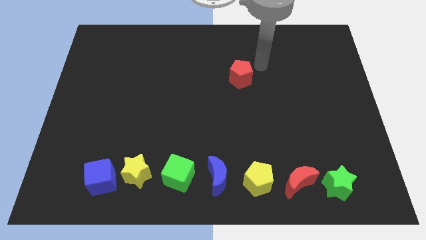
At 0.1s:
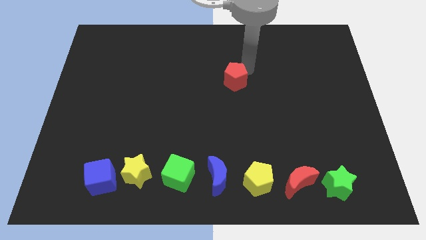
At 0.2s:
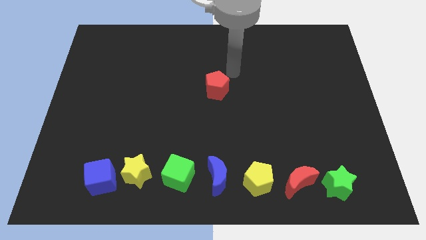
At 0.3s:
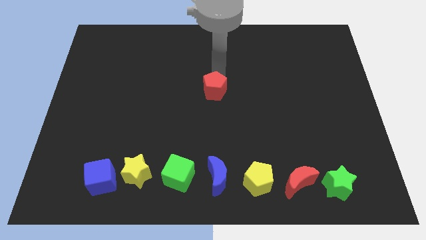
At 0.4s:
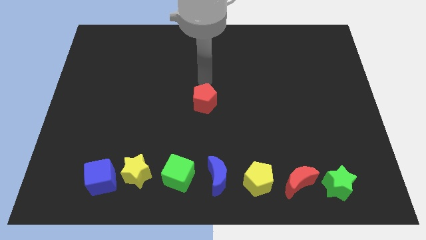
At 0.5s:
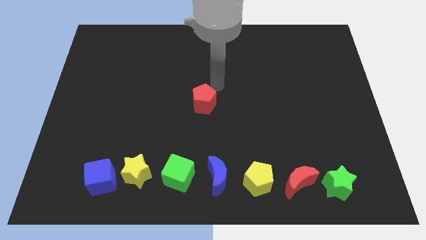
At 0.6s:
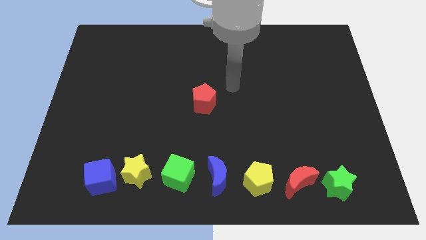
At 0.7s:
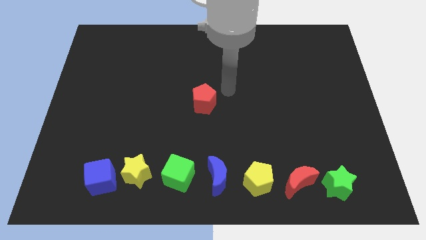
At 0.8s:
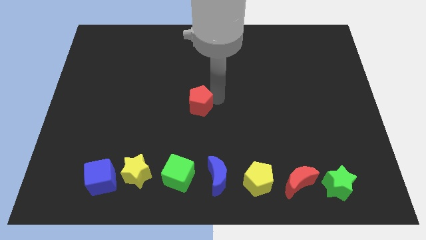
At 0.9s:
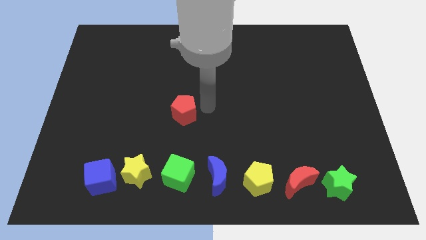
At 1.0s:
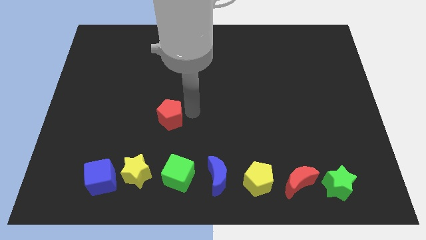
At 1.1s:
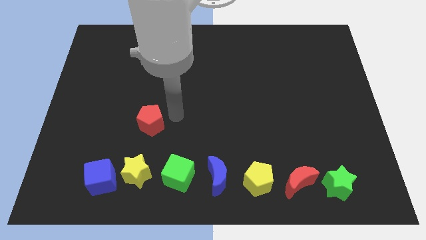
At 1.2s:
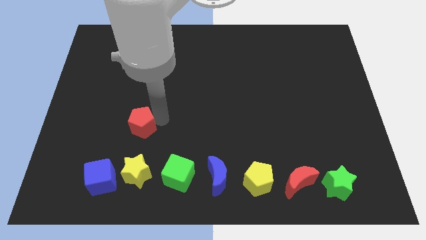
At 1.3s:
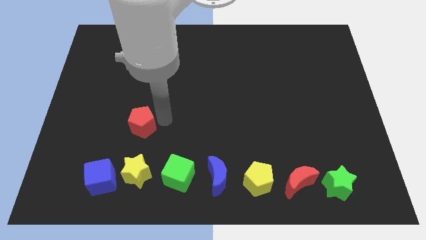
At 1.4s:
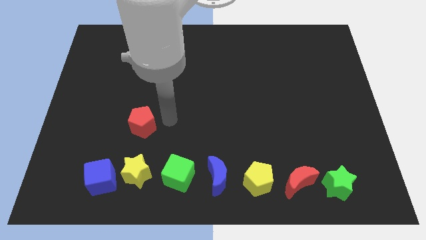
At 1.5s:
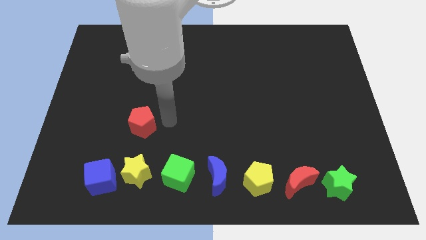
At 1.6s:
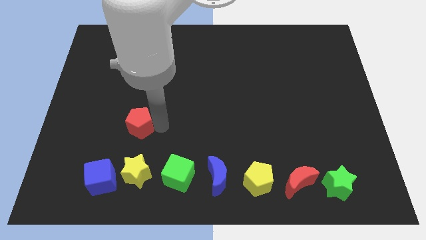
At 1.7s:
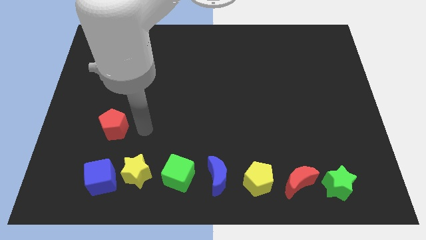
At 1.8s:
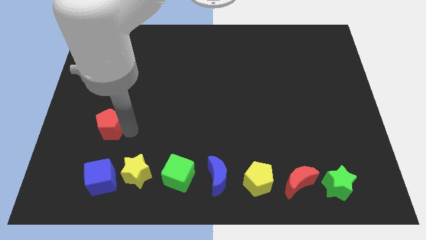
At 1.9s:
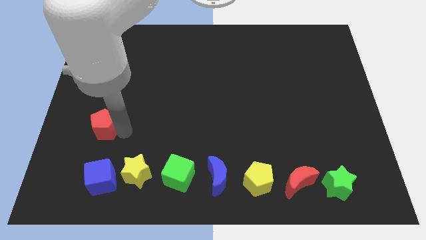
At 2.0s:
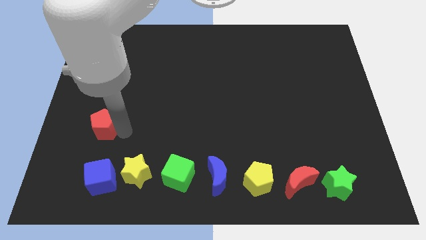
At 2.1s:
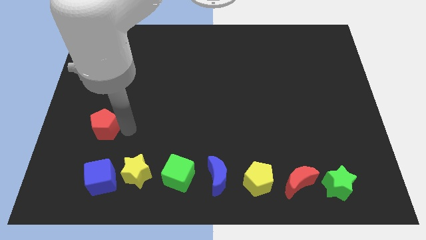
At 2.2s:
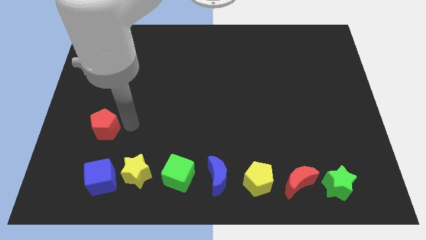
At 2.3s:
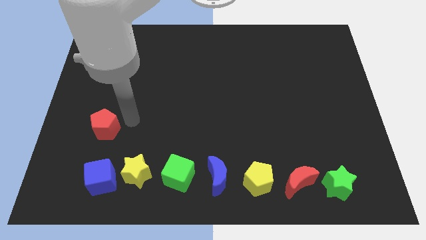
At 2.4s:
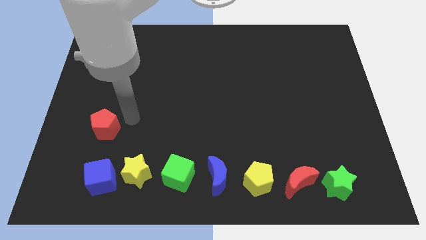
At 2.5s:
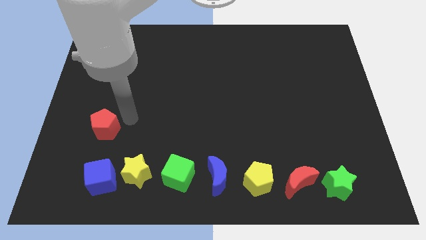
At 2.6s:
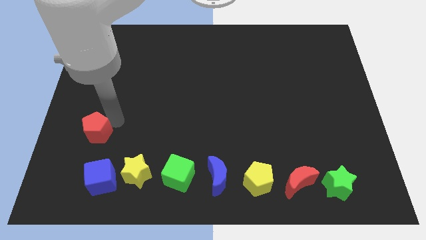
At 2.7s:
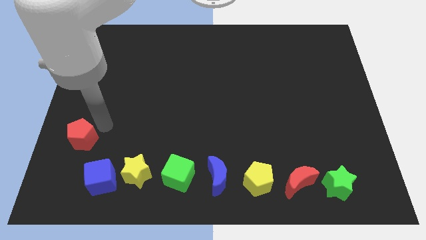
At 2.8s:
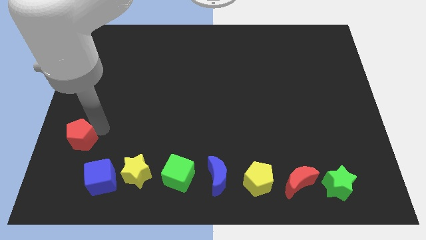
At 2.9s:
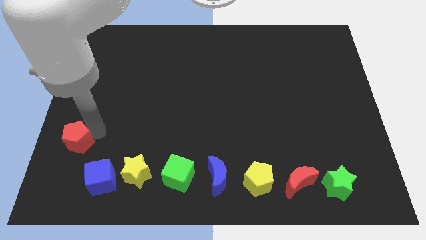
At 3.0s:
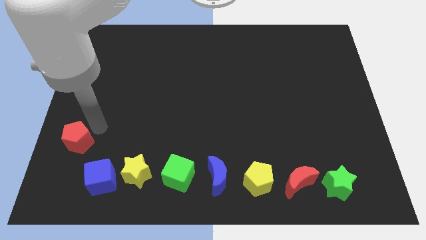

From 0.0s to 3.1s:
move the red pentagon towards the left corner of the board

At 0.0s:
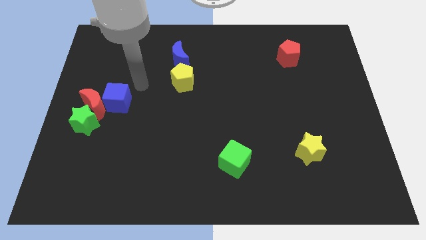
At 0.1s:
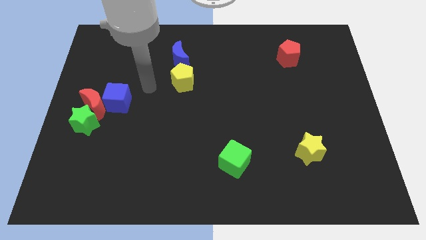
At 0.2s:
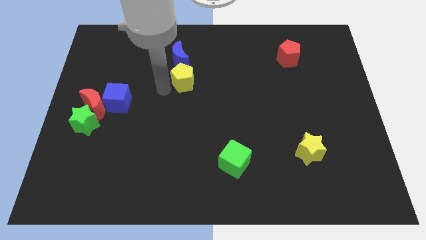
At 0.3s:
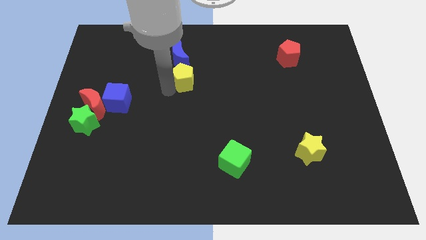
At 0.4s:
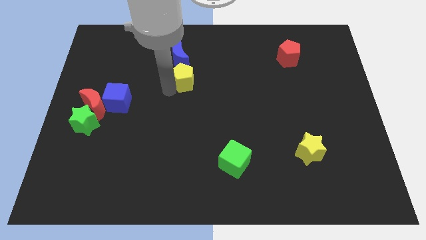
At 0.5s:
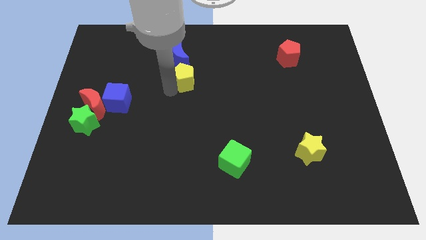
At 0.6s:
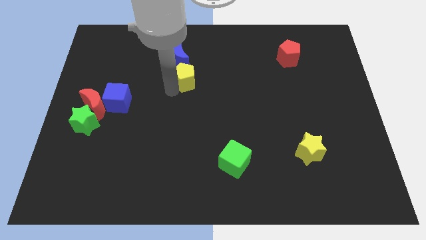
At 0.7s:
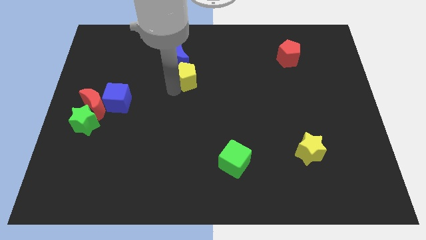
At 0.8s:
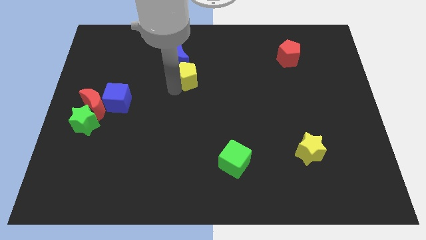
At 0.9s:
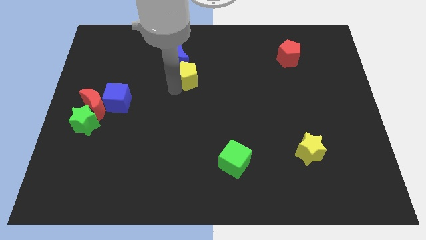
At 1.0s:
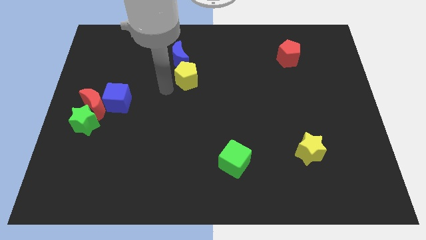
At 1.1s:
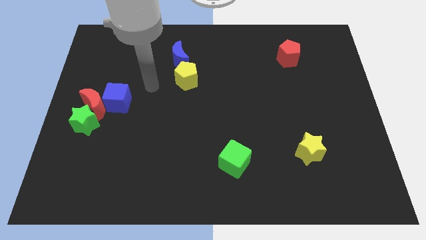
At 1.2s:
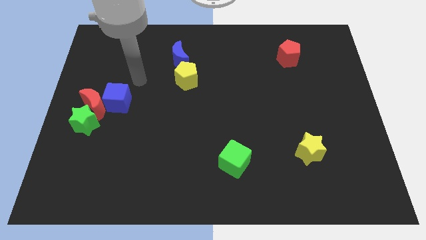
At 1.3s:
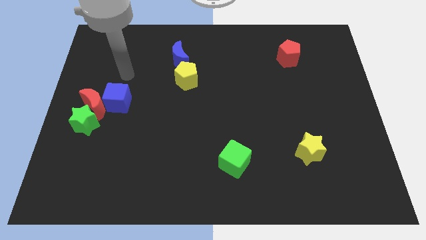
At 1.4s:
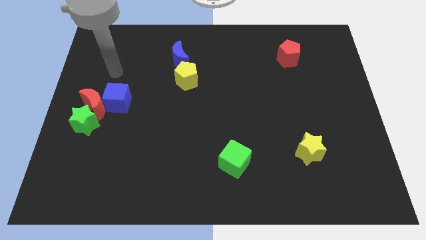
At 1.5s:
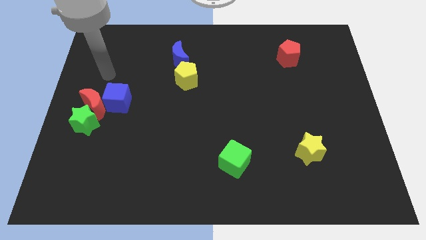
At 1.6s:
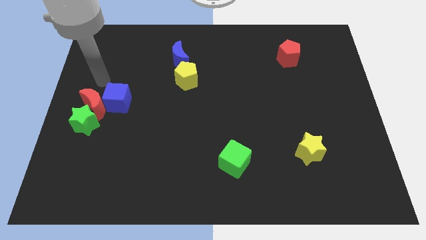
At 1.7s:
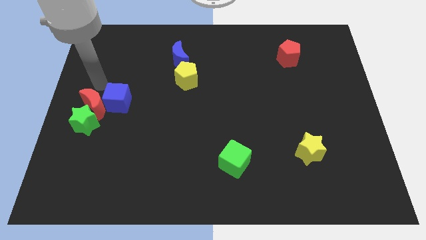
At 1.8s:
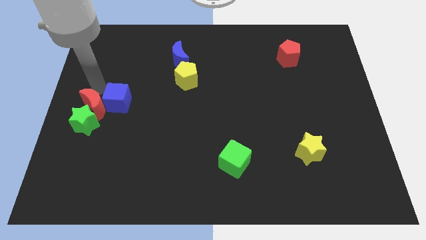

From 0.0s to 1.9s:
slightly move the yellow pentagon upwards

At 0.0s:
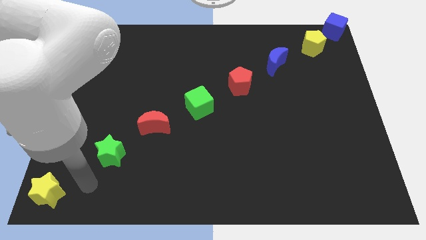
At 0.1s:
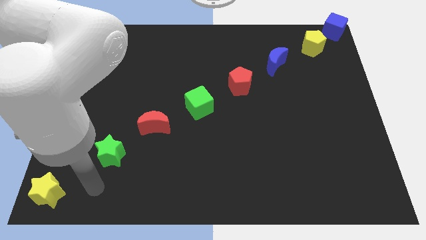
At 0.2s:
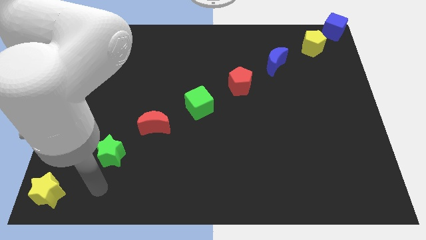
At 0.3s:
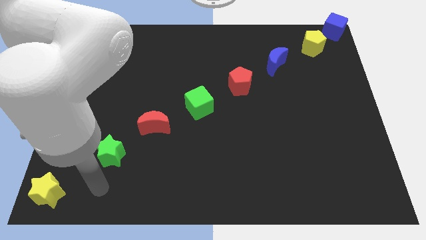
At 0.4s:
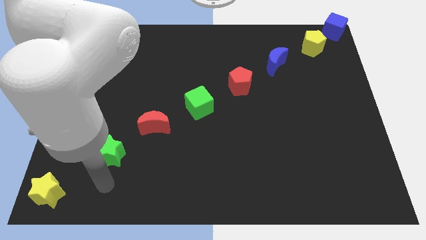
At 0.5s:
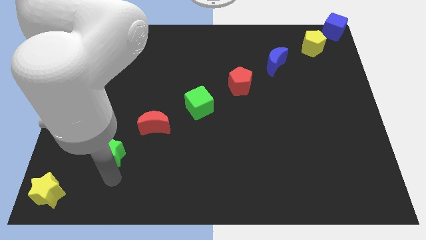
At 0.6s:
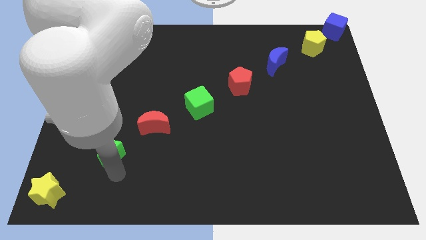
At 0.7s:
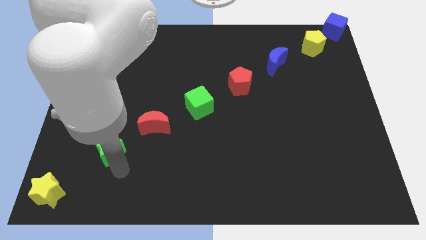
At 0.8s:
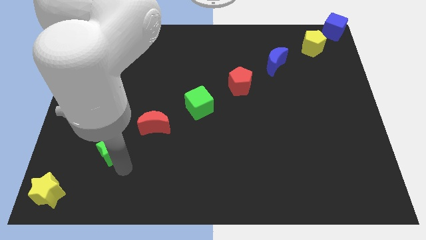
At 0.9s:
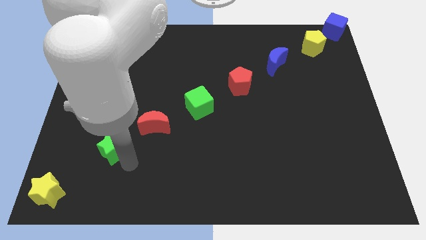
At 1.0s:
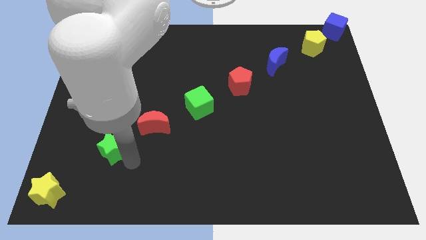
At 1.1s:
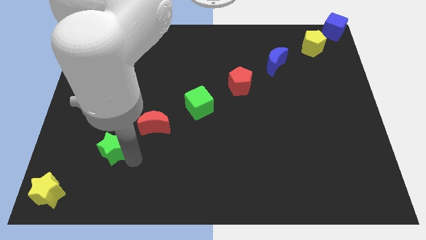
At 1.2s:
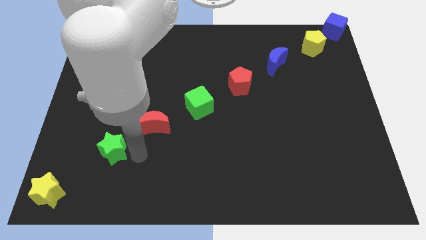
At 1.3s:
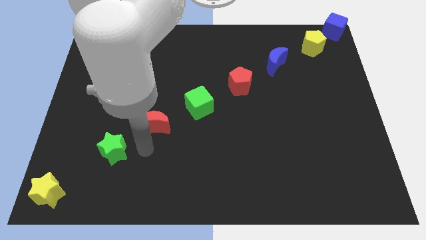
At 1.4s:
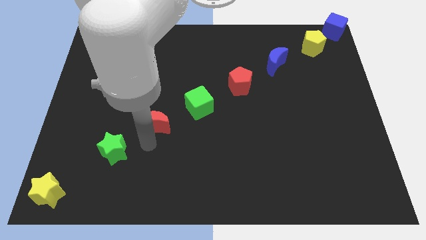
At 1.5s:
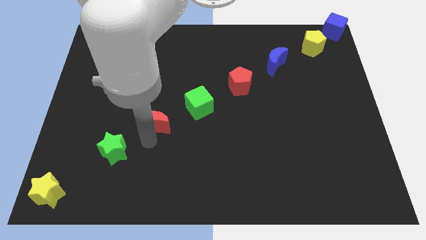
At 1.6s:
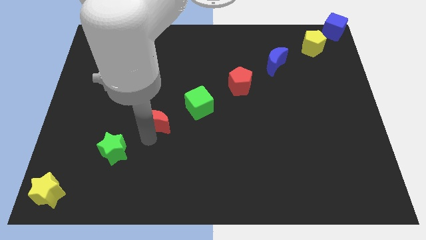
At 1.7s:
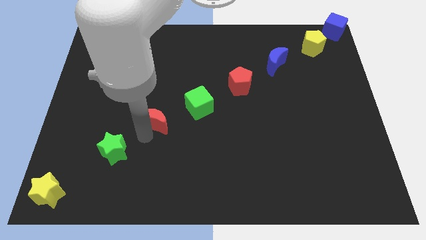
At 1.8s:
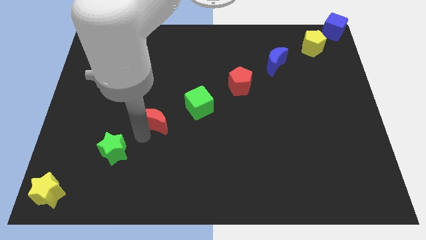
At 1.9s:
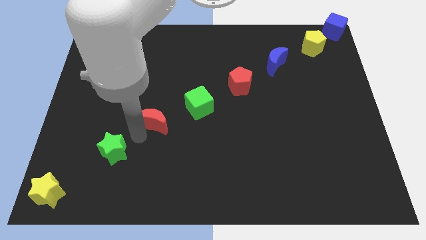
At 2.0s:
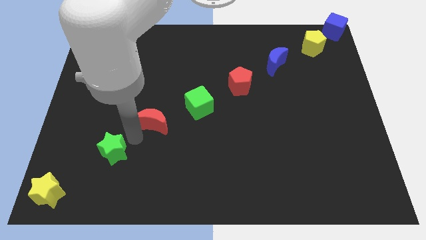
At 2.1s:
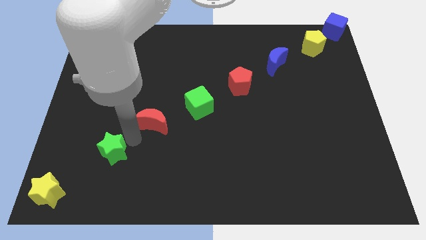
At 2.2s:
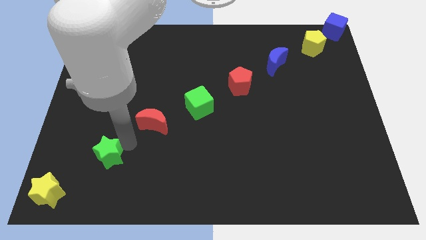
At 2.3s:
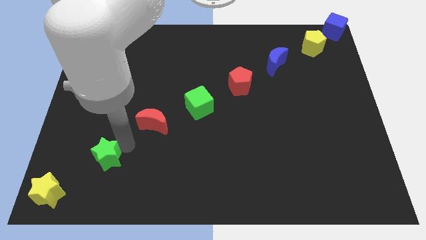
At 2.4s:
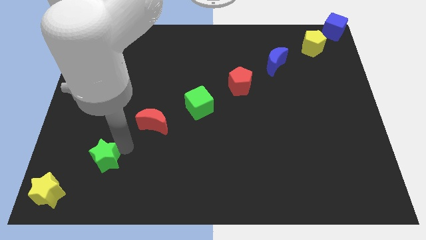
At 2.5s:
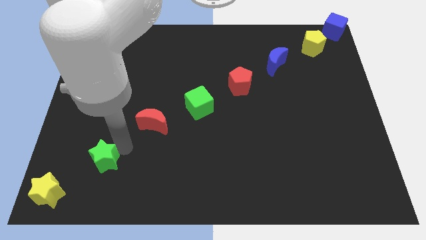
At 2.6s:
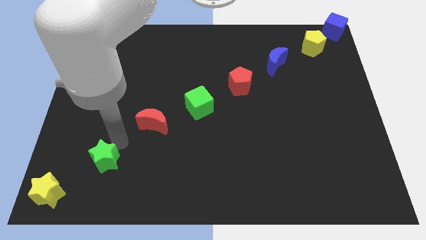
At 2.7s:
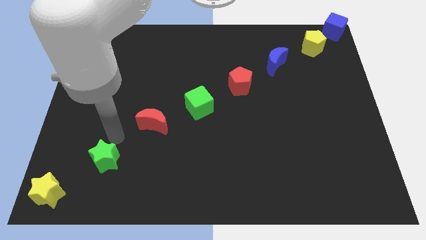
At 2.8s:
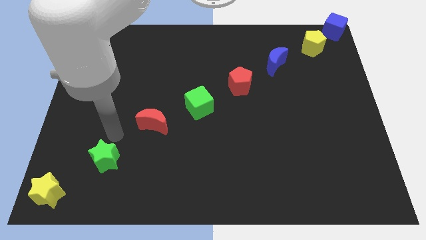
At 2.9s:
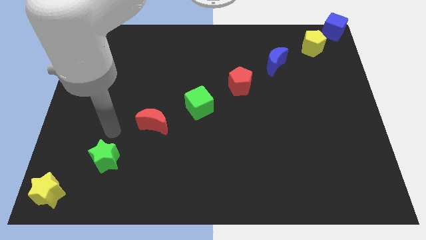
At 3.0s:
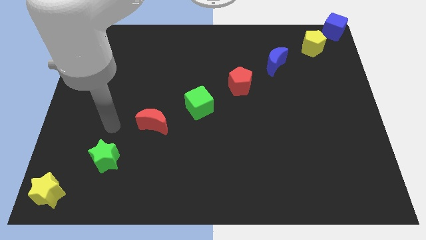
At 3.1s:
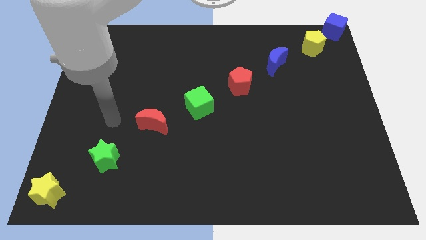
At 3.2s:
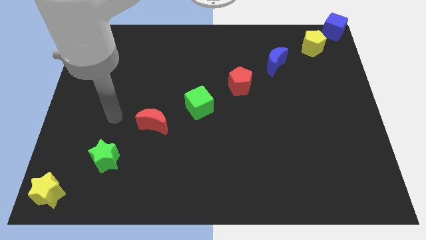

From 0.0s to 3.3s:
slightly push the green star towards the yellow star

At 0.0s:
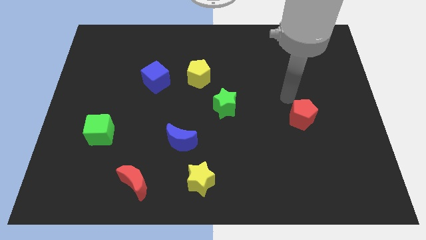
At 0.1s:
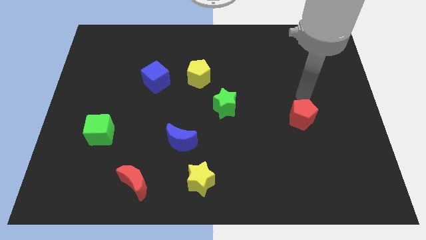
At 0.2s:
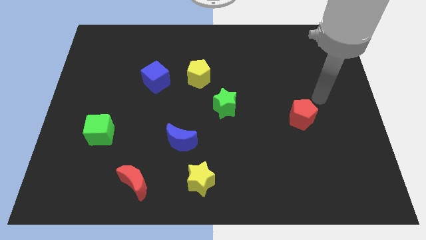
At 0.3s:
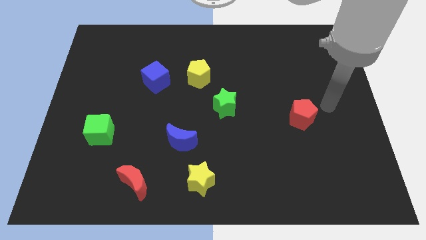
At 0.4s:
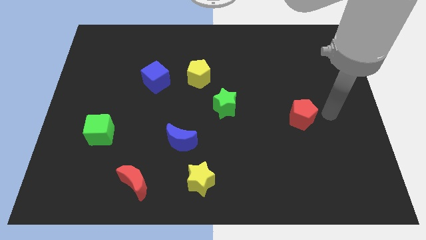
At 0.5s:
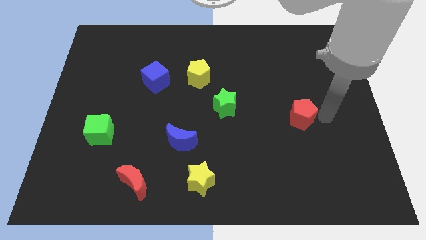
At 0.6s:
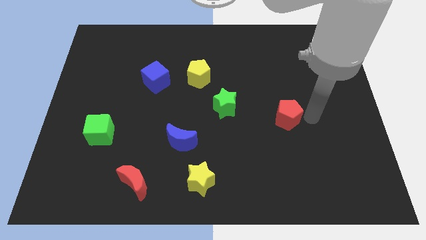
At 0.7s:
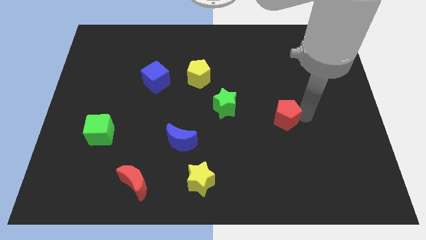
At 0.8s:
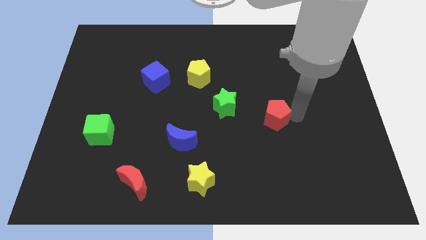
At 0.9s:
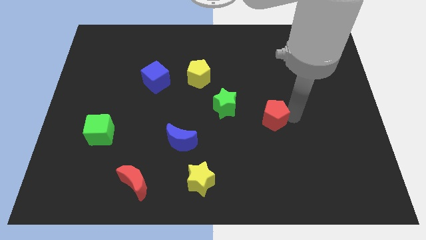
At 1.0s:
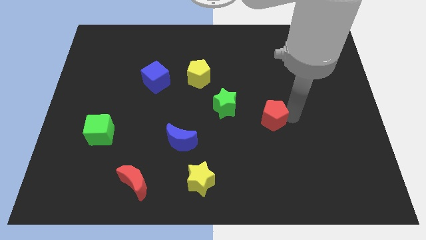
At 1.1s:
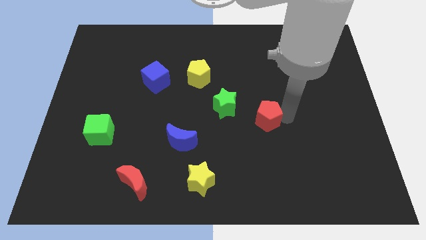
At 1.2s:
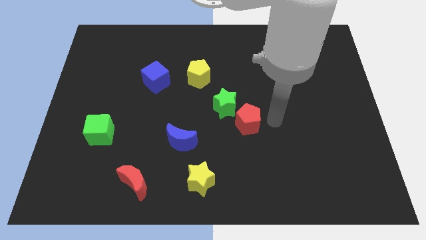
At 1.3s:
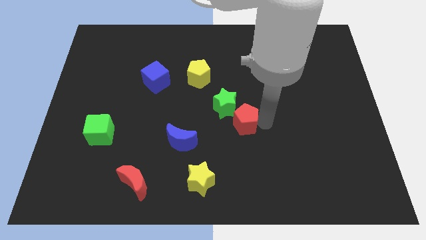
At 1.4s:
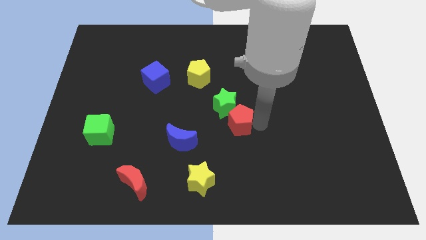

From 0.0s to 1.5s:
push the red pentagon into the bottom right of the green star
